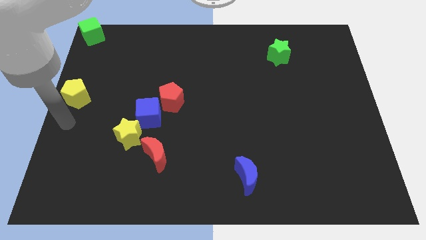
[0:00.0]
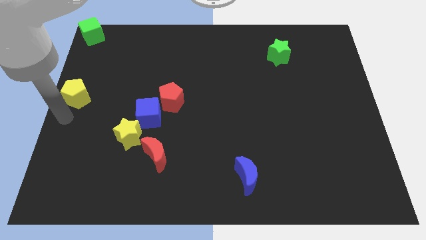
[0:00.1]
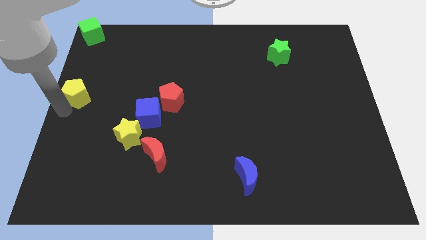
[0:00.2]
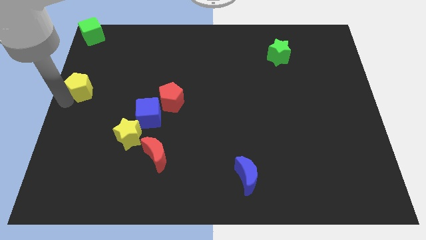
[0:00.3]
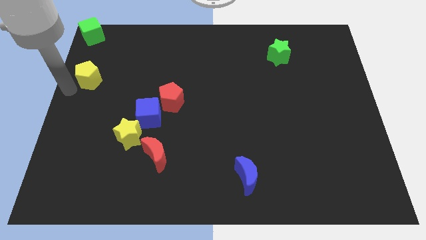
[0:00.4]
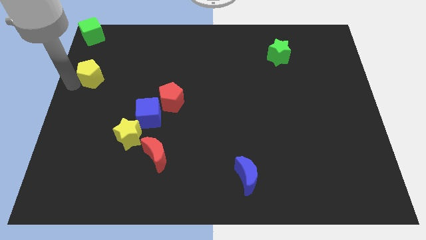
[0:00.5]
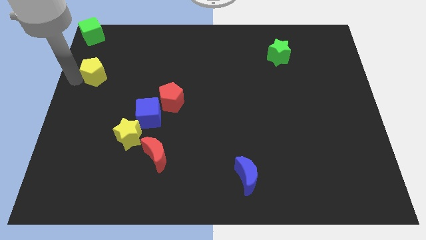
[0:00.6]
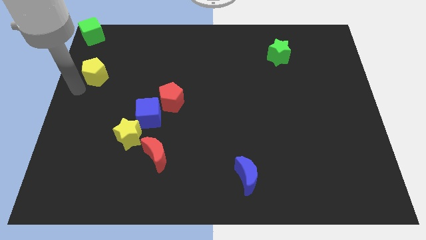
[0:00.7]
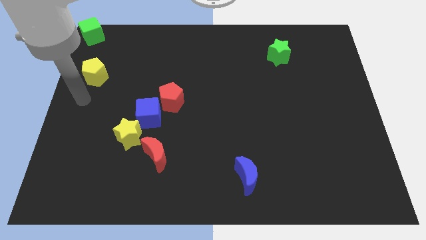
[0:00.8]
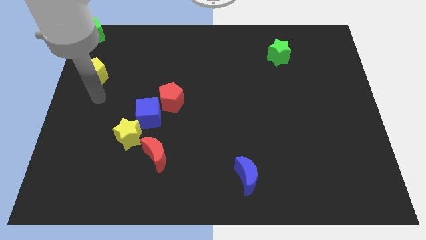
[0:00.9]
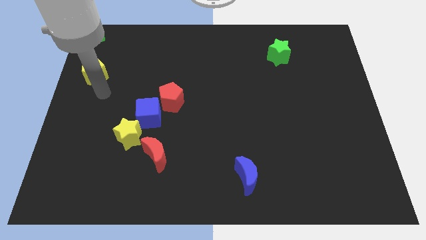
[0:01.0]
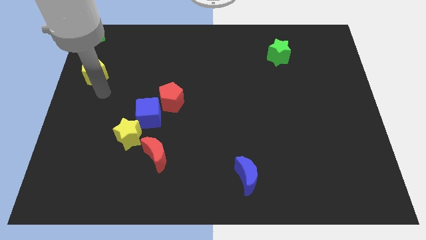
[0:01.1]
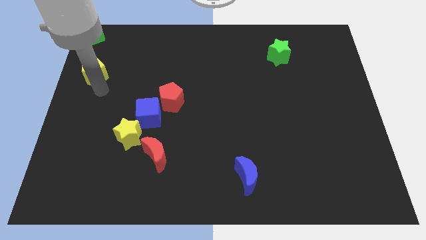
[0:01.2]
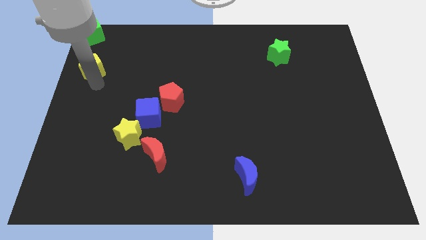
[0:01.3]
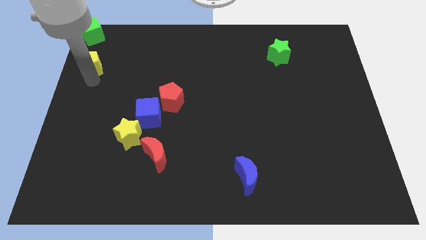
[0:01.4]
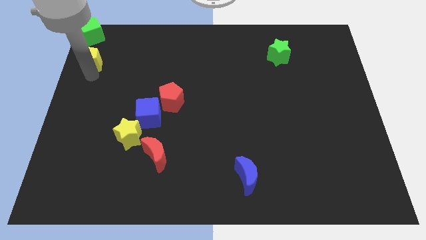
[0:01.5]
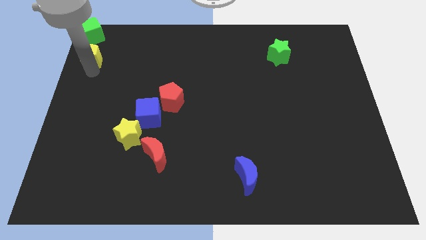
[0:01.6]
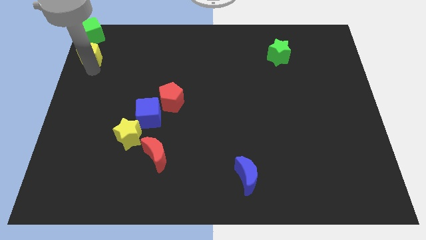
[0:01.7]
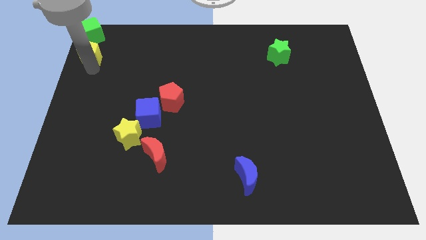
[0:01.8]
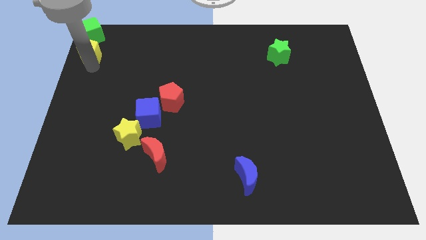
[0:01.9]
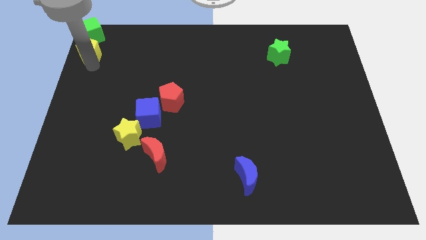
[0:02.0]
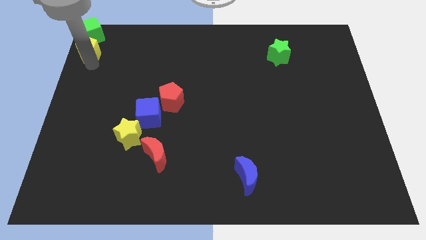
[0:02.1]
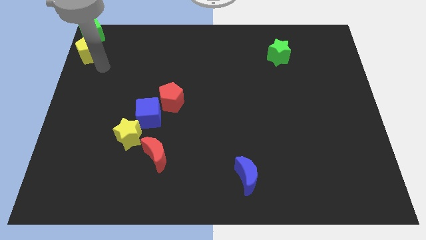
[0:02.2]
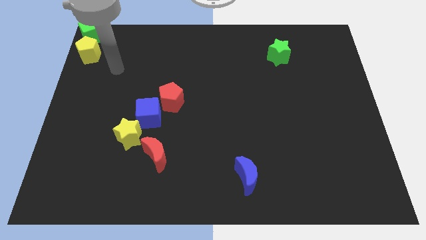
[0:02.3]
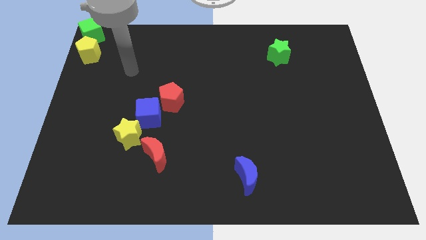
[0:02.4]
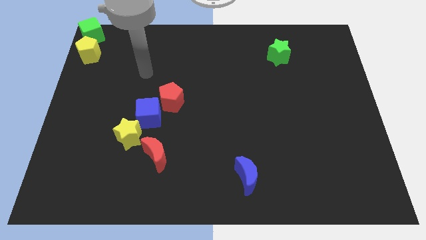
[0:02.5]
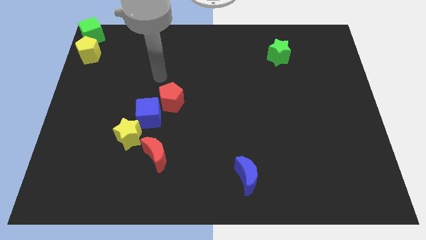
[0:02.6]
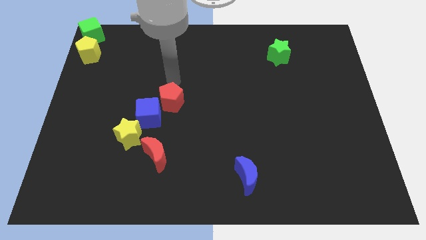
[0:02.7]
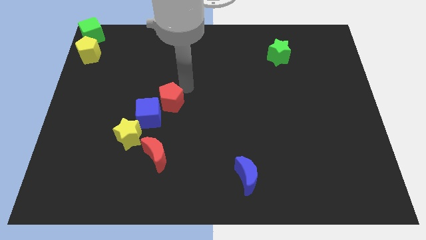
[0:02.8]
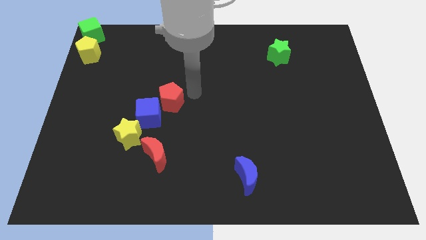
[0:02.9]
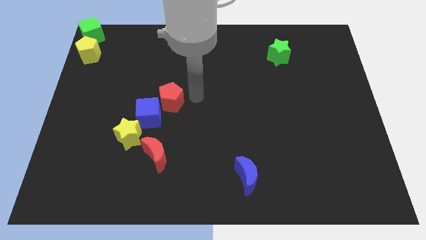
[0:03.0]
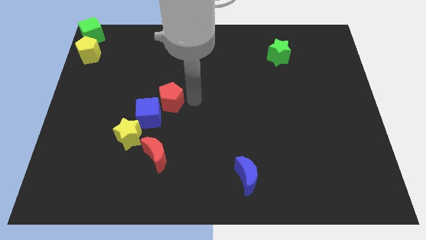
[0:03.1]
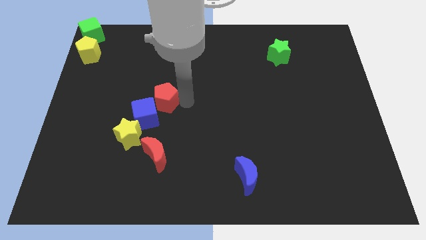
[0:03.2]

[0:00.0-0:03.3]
put the yellow pentagon at the top left corner

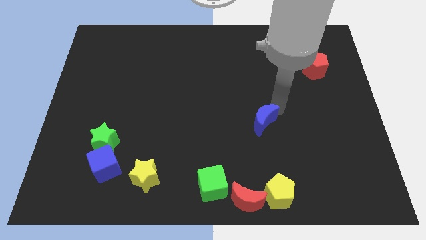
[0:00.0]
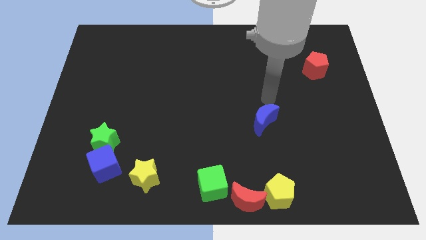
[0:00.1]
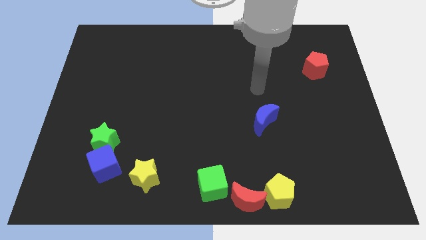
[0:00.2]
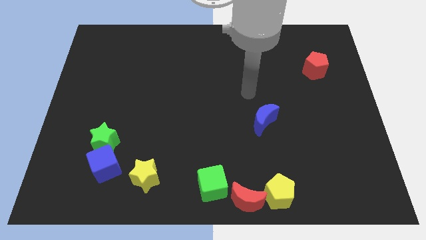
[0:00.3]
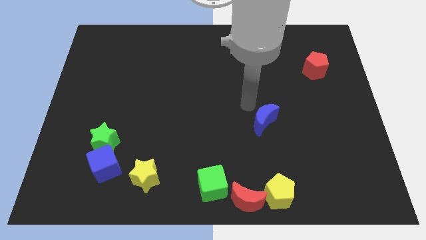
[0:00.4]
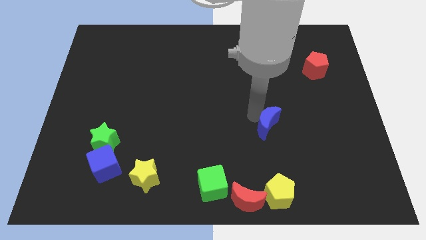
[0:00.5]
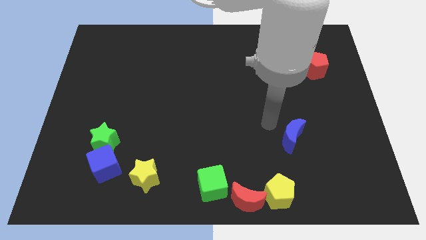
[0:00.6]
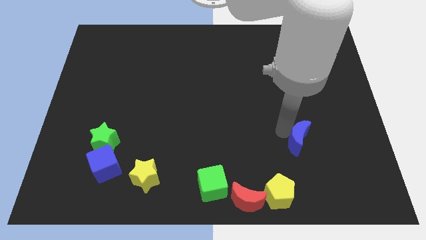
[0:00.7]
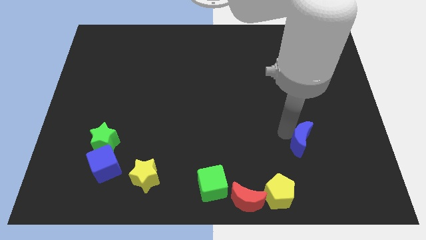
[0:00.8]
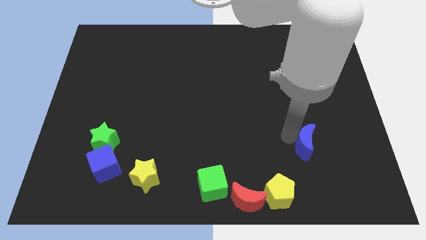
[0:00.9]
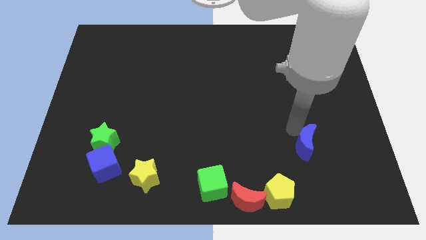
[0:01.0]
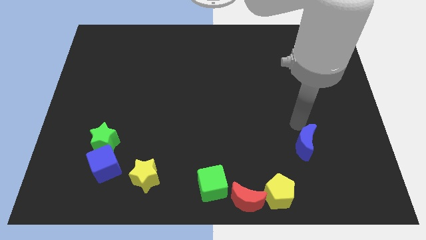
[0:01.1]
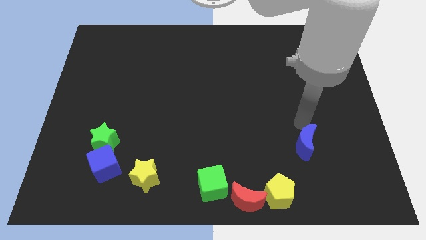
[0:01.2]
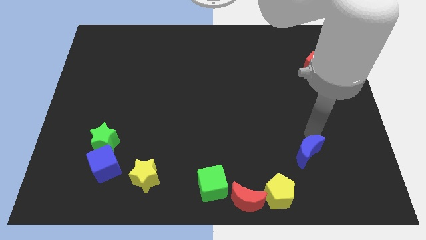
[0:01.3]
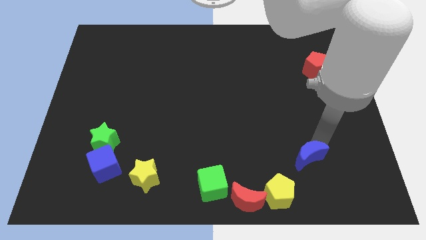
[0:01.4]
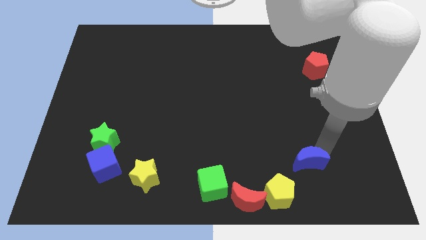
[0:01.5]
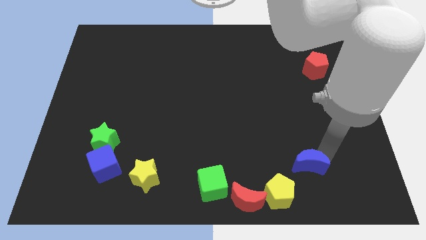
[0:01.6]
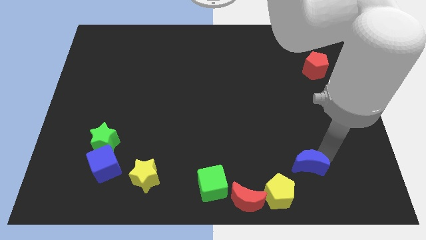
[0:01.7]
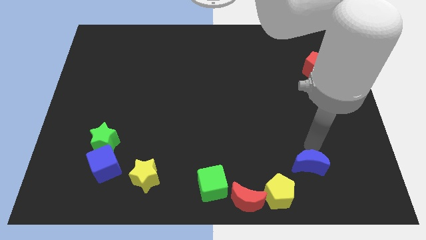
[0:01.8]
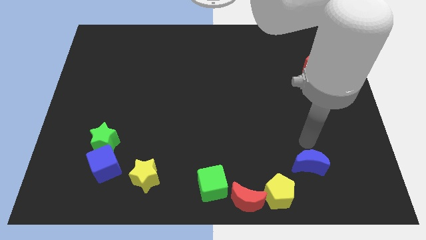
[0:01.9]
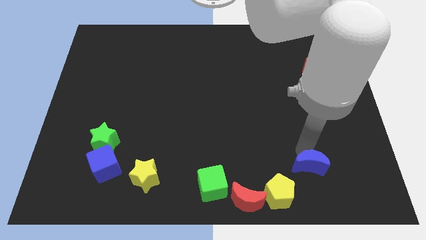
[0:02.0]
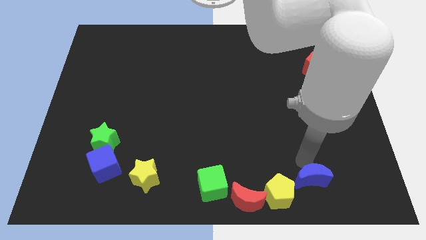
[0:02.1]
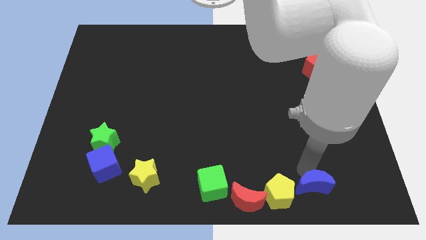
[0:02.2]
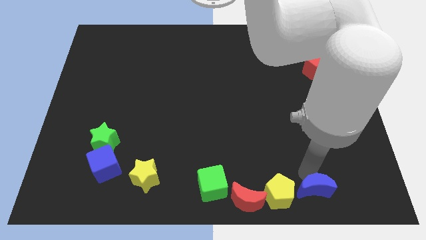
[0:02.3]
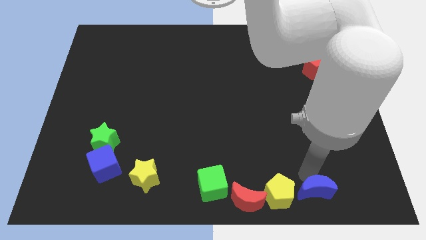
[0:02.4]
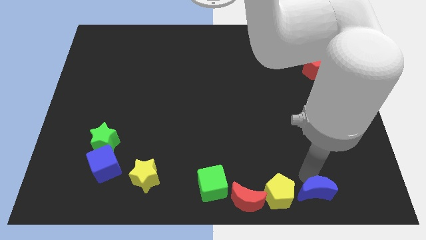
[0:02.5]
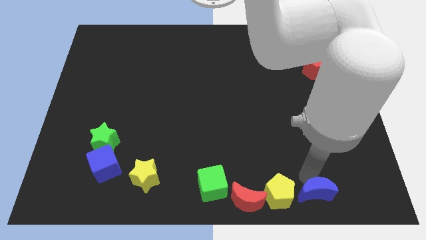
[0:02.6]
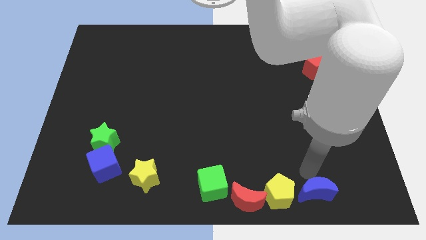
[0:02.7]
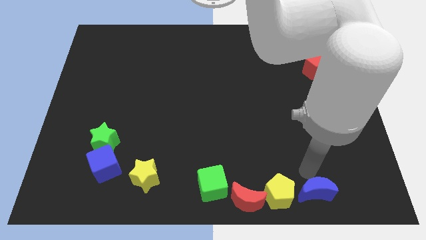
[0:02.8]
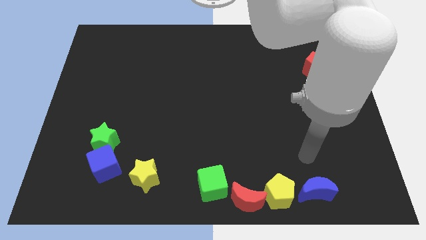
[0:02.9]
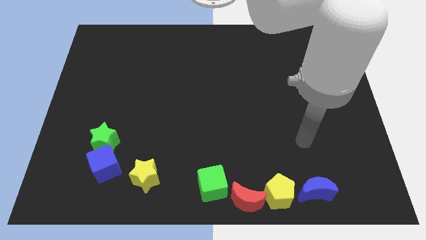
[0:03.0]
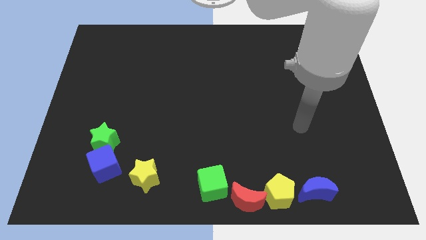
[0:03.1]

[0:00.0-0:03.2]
place the blue moon parallel right to the yellow pentagon

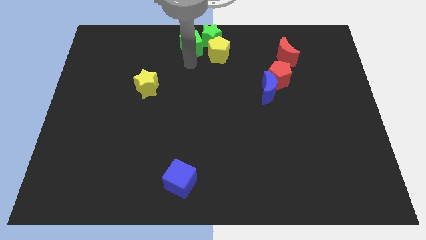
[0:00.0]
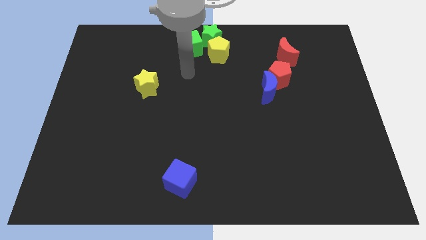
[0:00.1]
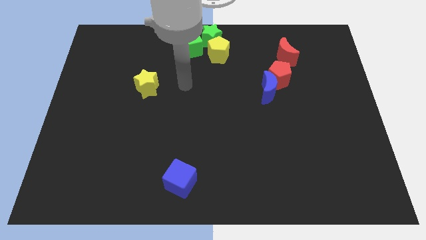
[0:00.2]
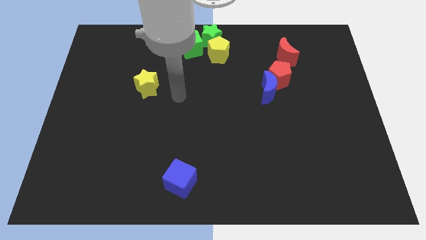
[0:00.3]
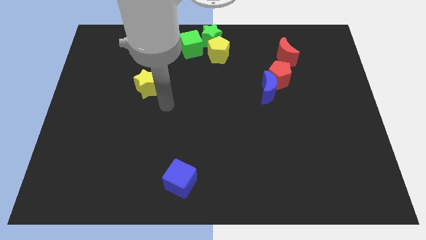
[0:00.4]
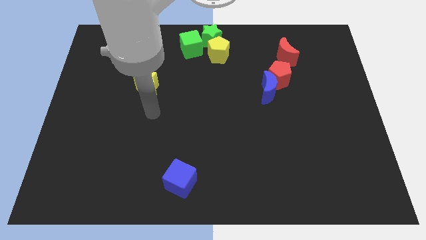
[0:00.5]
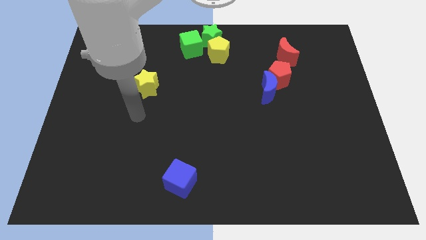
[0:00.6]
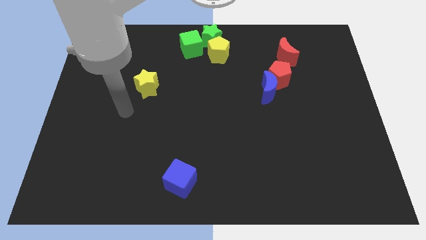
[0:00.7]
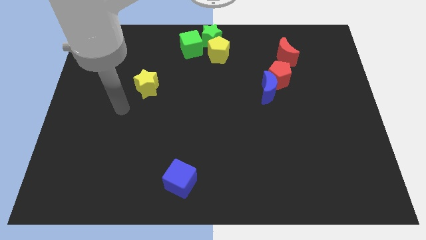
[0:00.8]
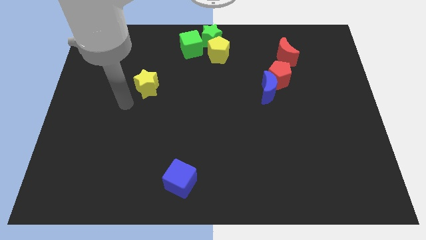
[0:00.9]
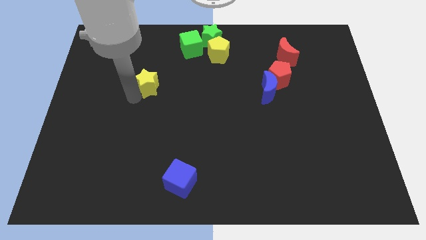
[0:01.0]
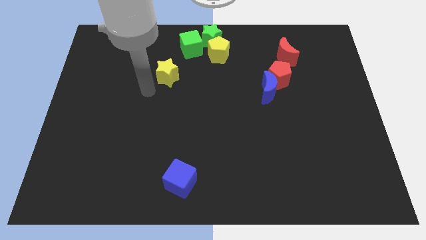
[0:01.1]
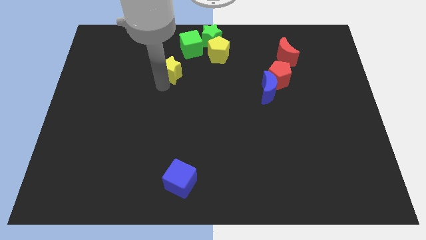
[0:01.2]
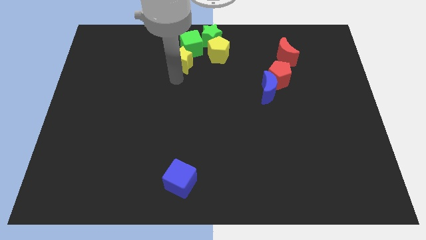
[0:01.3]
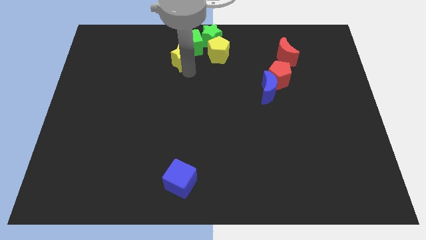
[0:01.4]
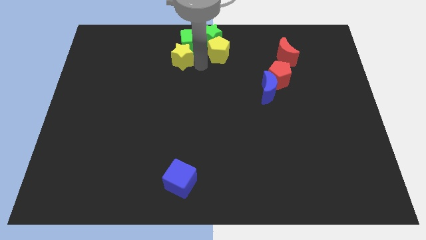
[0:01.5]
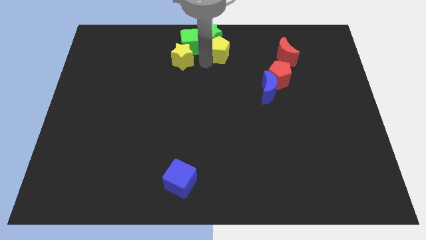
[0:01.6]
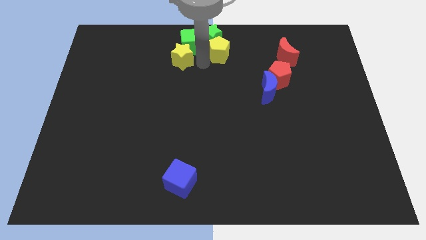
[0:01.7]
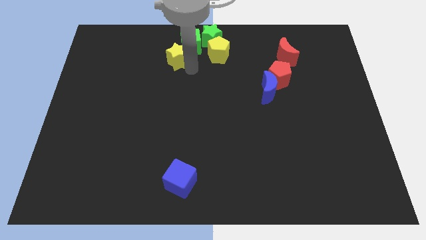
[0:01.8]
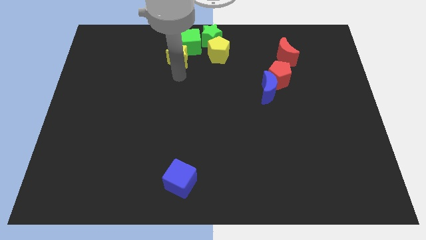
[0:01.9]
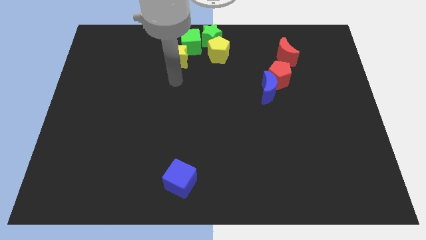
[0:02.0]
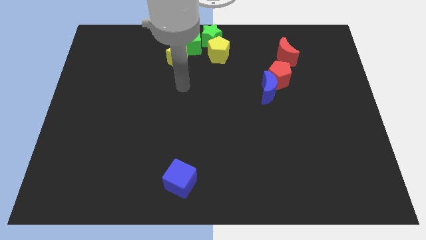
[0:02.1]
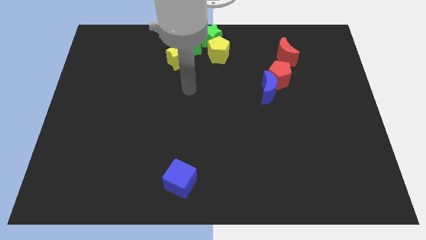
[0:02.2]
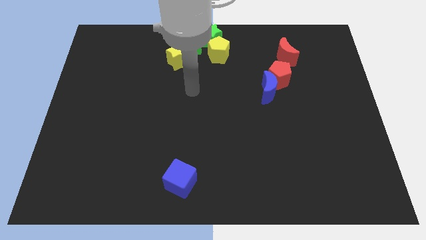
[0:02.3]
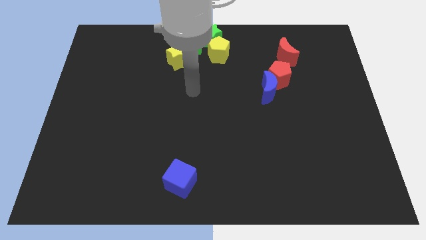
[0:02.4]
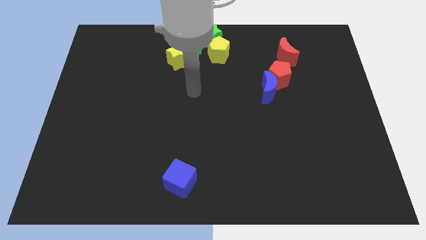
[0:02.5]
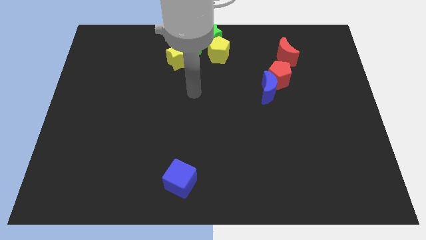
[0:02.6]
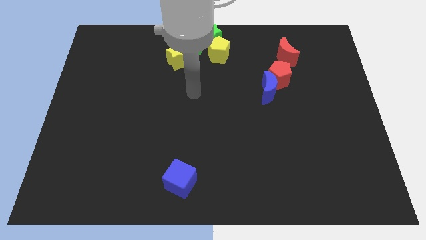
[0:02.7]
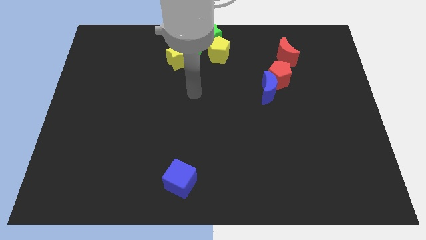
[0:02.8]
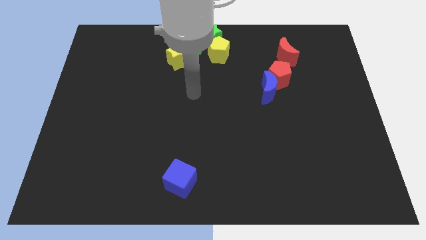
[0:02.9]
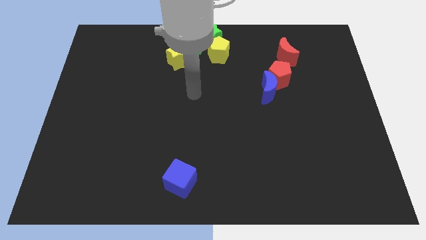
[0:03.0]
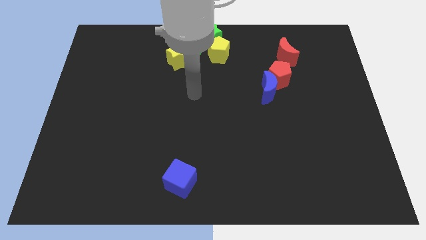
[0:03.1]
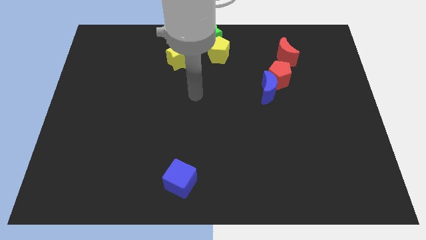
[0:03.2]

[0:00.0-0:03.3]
push the yellow star to the bottom of the green cube
